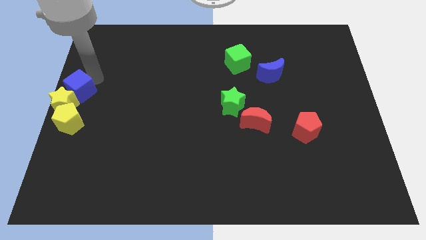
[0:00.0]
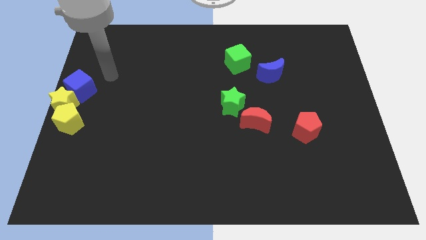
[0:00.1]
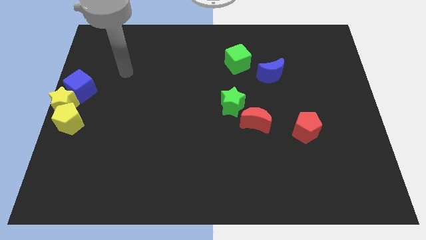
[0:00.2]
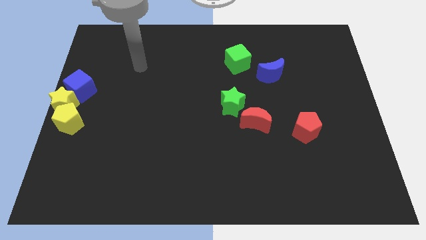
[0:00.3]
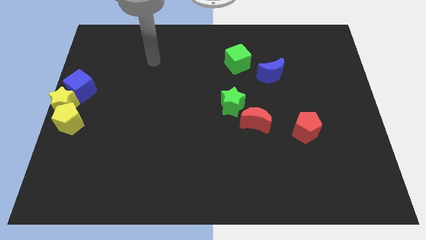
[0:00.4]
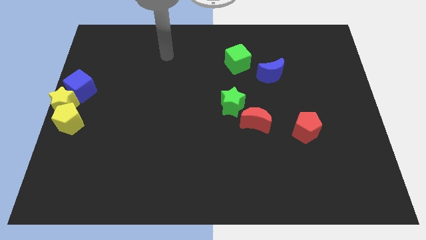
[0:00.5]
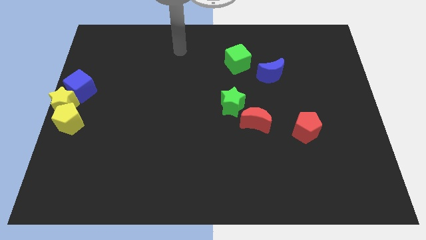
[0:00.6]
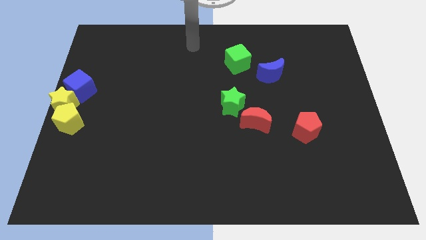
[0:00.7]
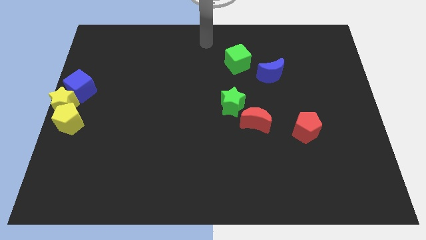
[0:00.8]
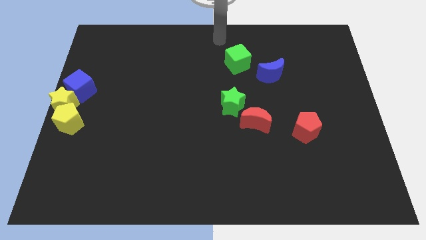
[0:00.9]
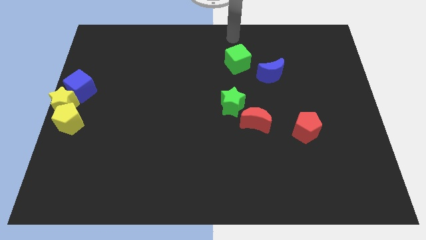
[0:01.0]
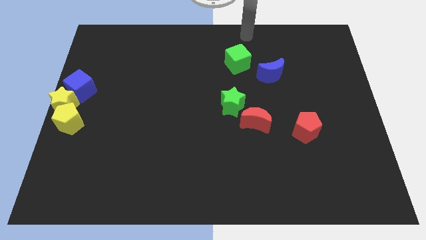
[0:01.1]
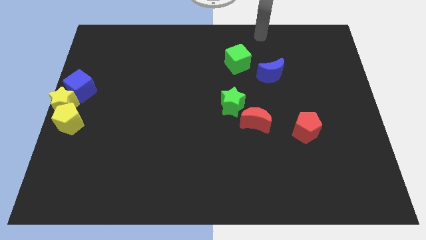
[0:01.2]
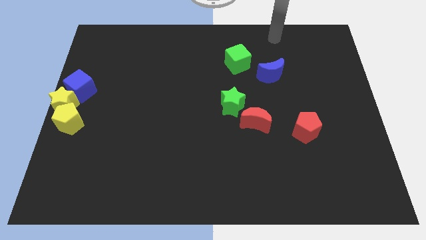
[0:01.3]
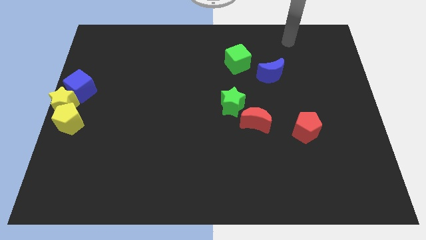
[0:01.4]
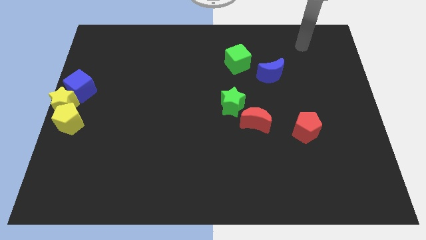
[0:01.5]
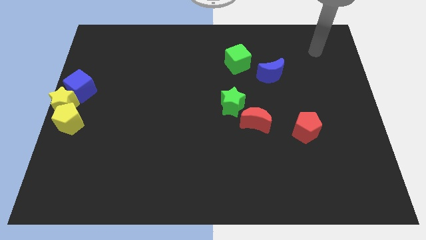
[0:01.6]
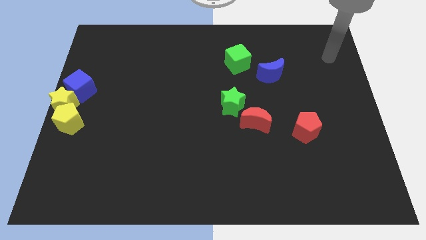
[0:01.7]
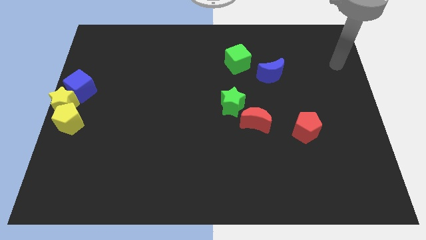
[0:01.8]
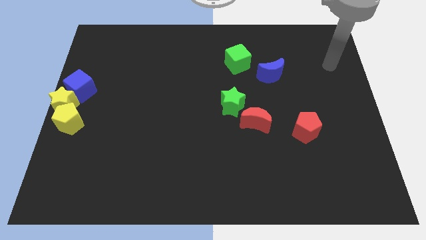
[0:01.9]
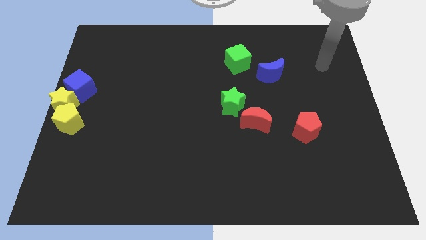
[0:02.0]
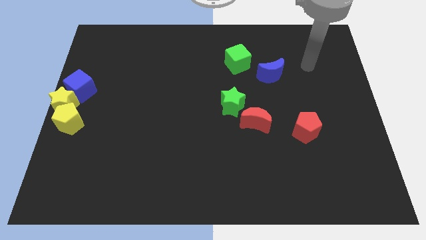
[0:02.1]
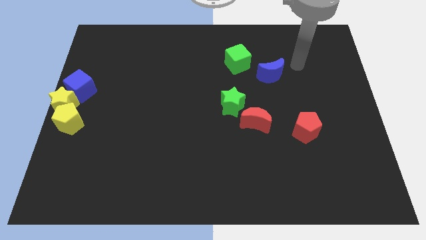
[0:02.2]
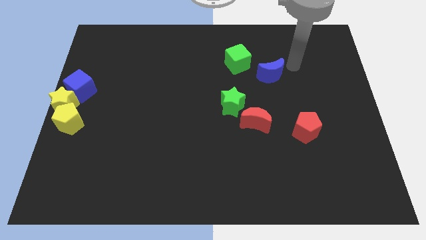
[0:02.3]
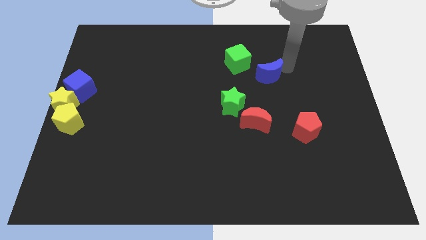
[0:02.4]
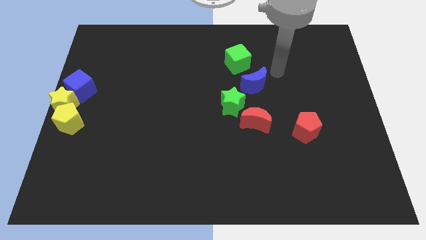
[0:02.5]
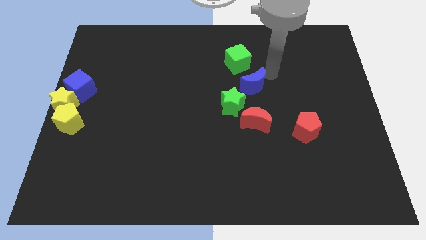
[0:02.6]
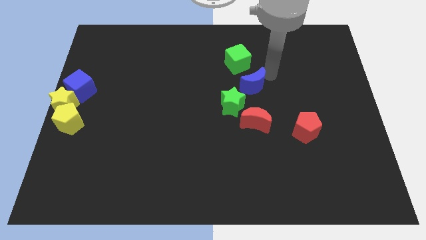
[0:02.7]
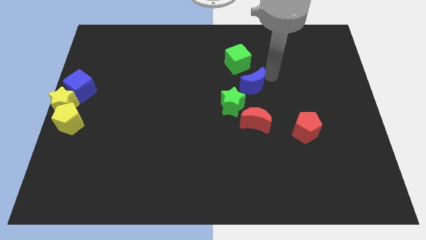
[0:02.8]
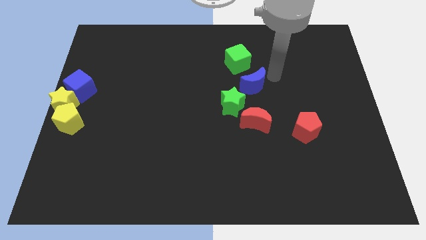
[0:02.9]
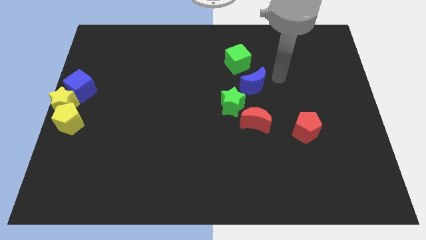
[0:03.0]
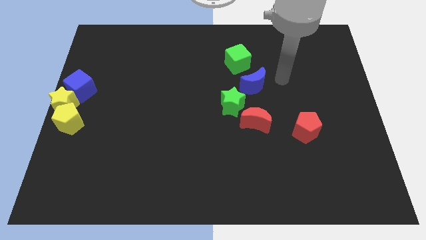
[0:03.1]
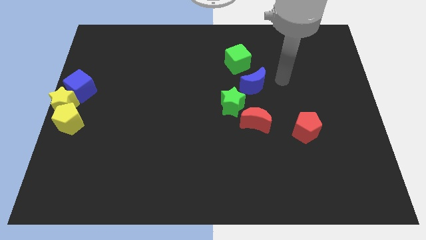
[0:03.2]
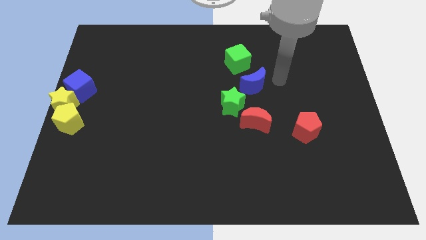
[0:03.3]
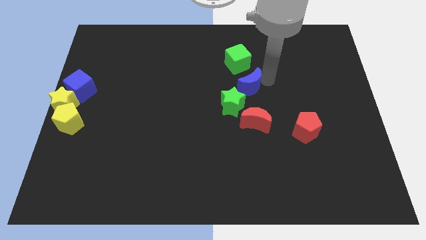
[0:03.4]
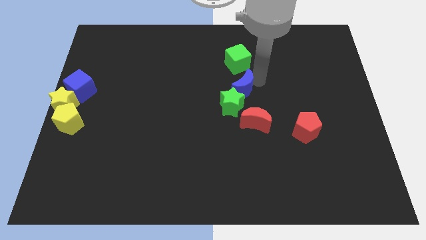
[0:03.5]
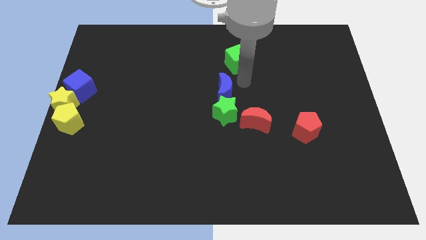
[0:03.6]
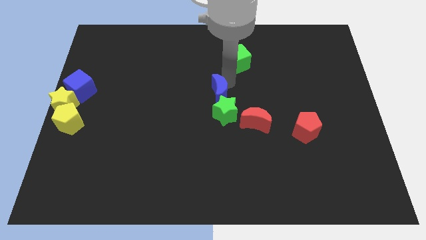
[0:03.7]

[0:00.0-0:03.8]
place the blue moon above the green star

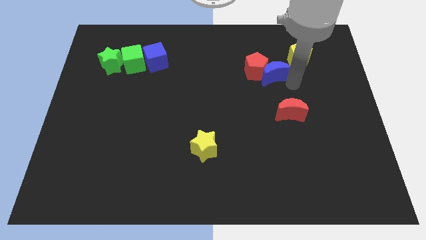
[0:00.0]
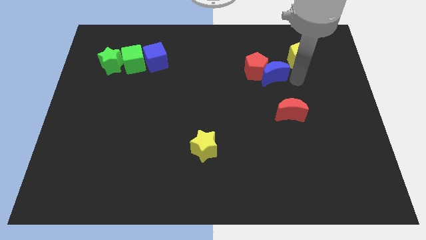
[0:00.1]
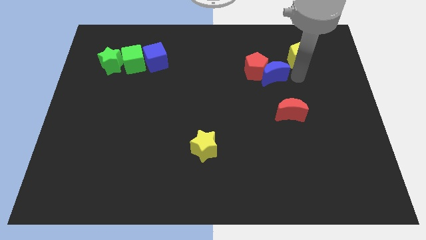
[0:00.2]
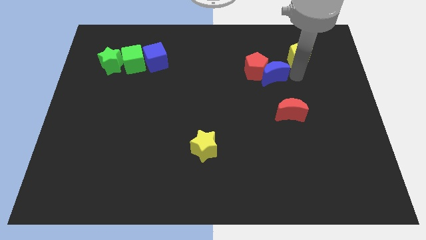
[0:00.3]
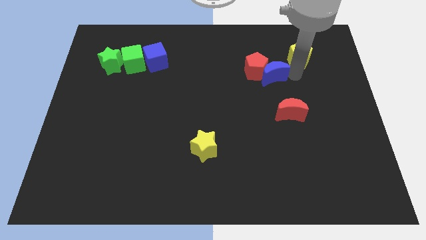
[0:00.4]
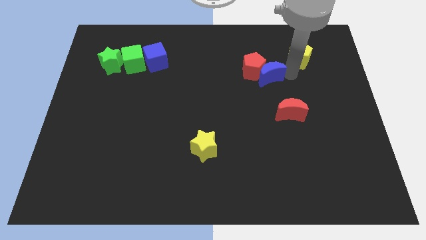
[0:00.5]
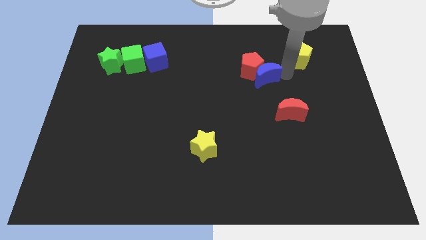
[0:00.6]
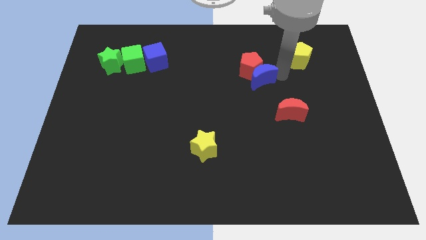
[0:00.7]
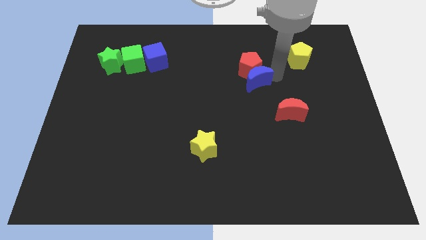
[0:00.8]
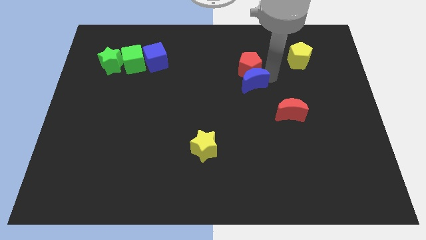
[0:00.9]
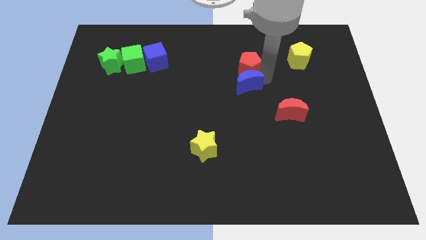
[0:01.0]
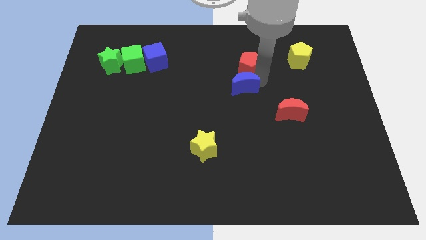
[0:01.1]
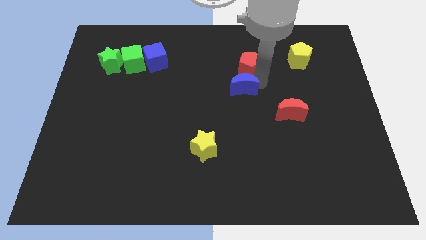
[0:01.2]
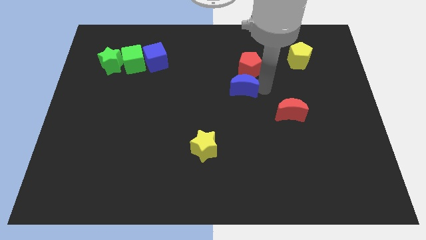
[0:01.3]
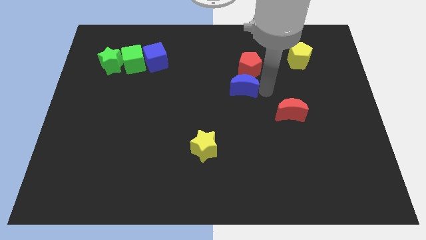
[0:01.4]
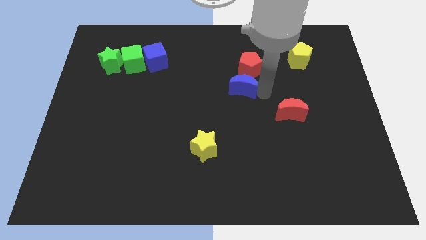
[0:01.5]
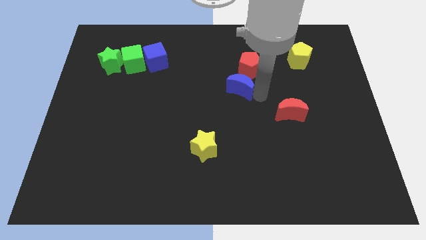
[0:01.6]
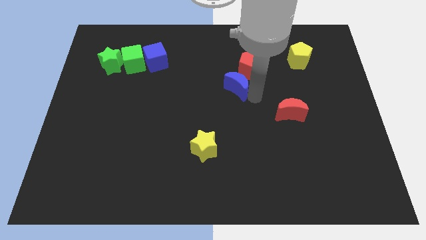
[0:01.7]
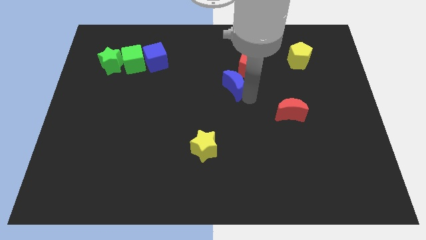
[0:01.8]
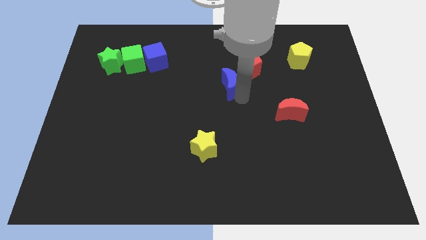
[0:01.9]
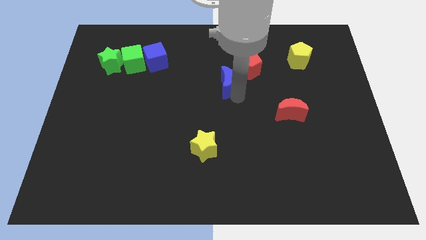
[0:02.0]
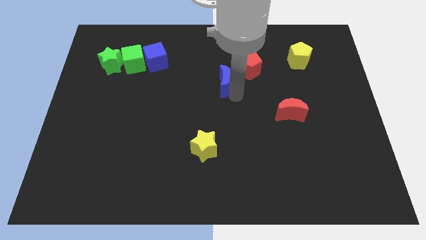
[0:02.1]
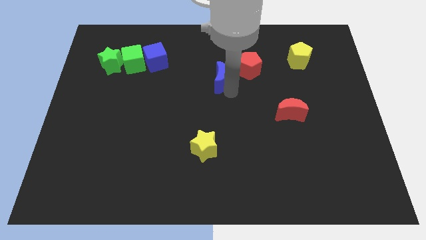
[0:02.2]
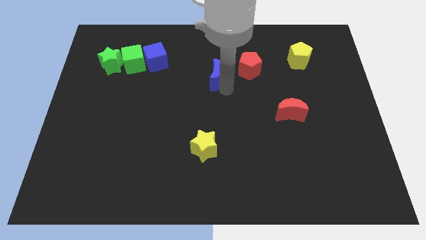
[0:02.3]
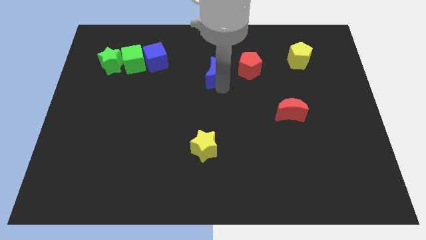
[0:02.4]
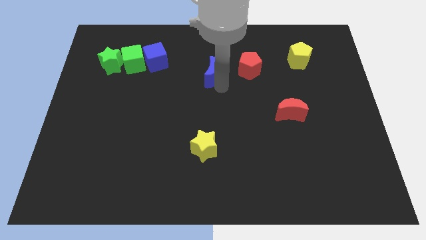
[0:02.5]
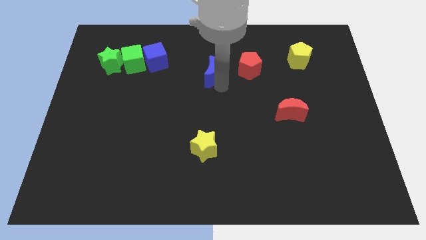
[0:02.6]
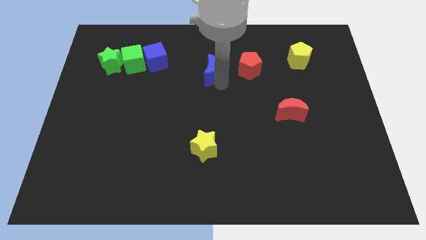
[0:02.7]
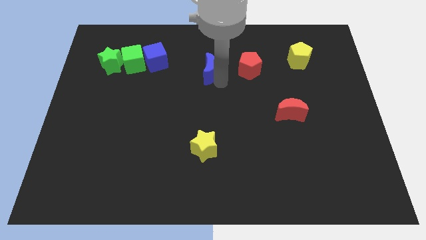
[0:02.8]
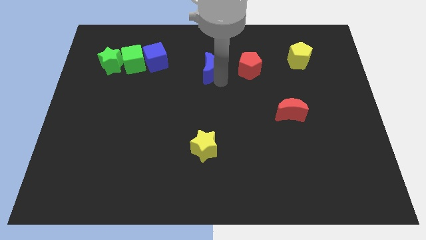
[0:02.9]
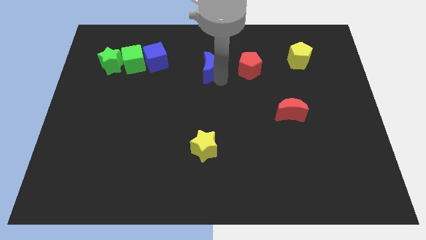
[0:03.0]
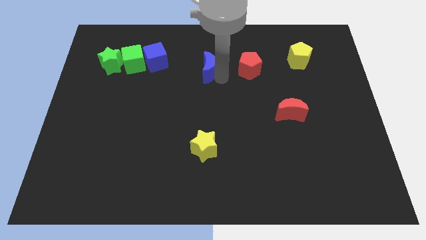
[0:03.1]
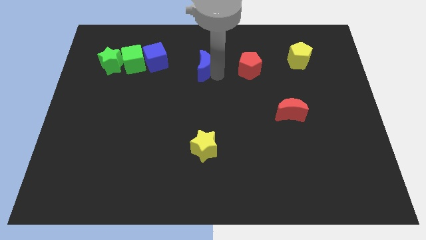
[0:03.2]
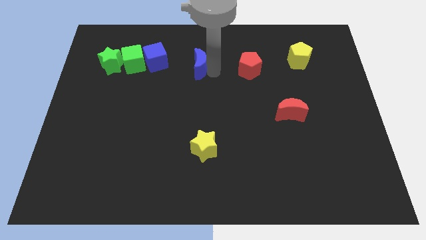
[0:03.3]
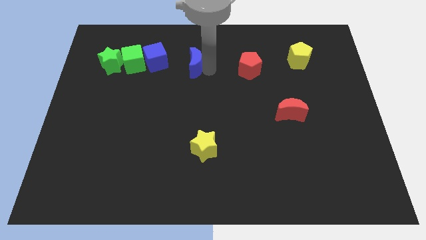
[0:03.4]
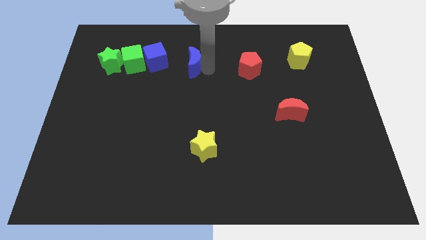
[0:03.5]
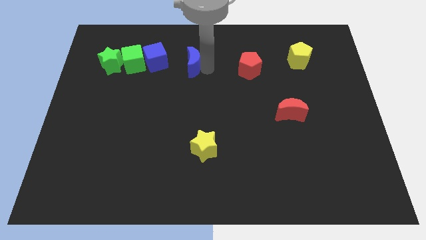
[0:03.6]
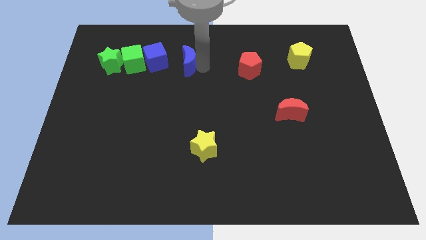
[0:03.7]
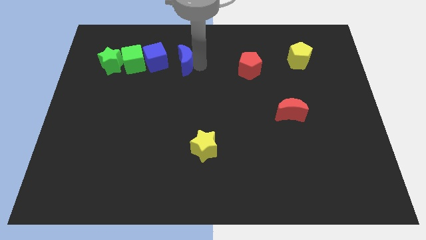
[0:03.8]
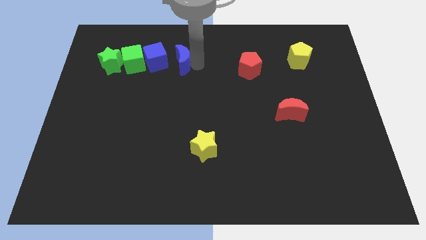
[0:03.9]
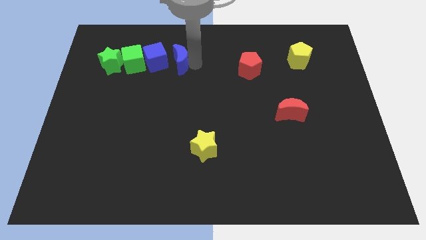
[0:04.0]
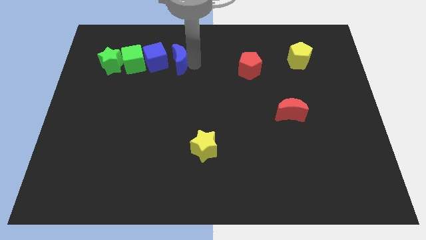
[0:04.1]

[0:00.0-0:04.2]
move the blue moon to the right of blue cube

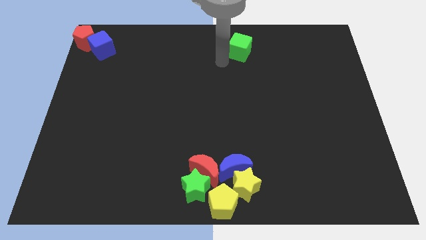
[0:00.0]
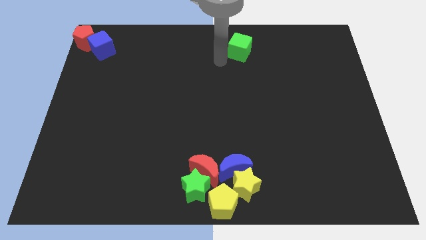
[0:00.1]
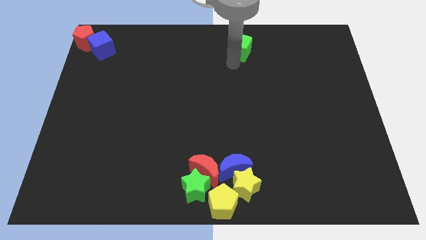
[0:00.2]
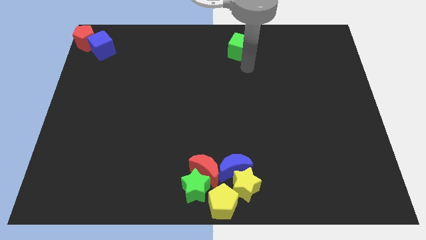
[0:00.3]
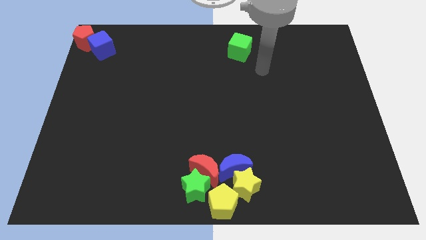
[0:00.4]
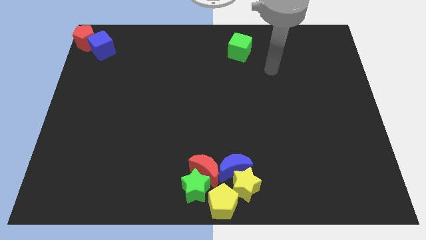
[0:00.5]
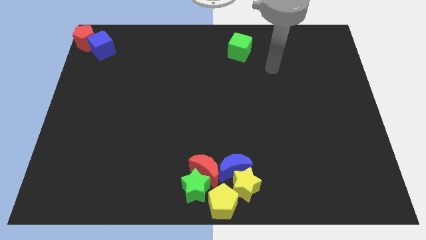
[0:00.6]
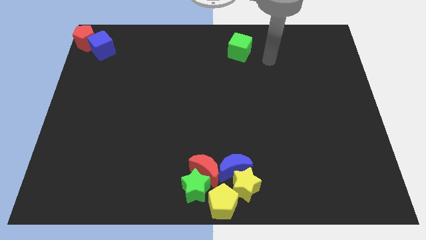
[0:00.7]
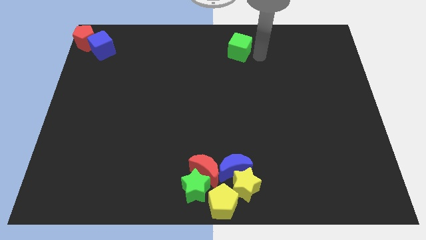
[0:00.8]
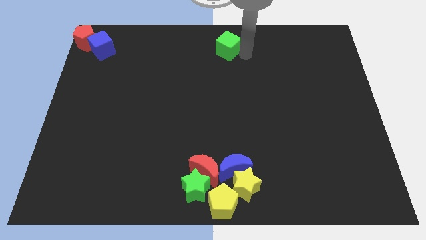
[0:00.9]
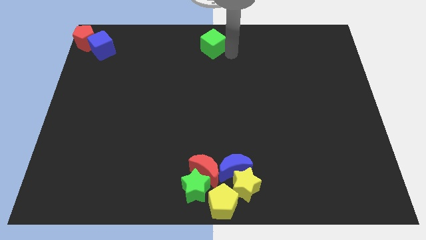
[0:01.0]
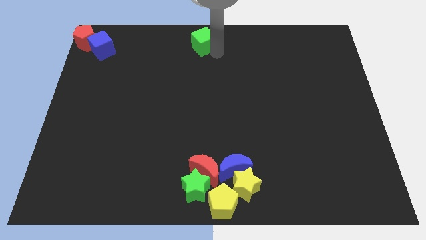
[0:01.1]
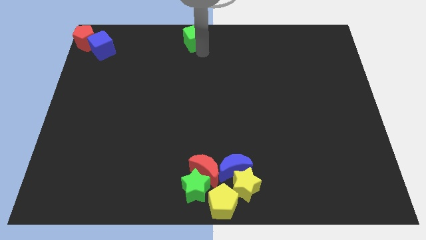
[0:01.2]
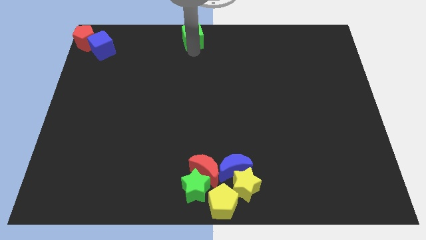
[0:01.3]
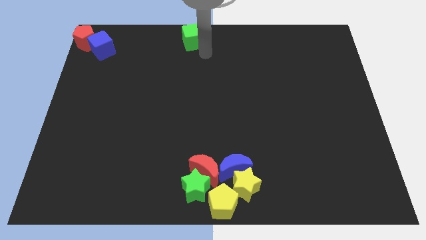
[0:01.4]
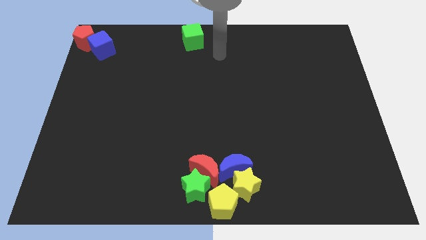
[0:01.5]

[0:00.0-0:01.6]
push the green cube slightly to the left side of the board
